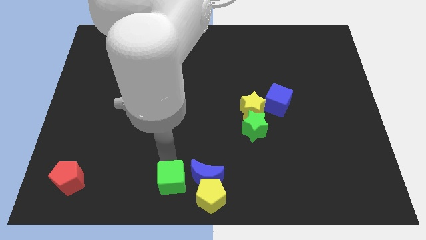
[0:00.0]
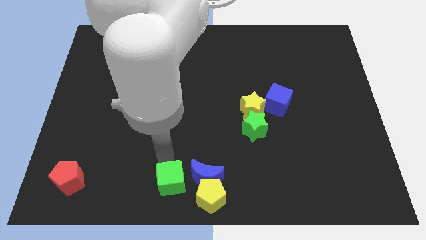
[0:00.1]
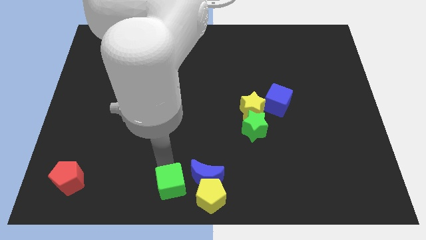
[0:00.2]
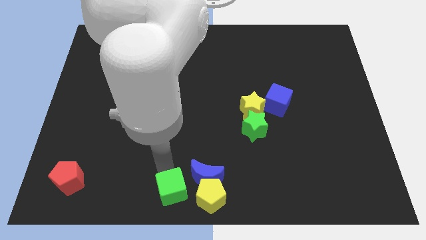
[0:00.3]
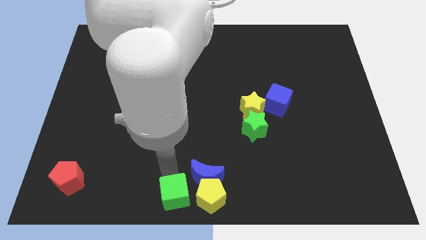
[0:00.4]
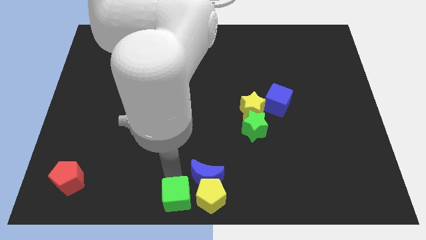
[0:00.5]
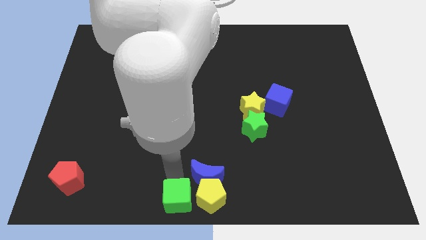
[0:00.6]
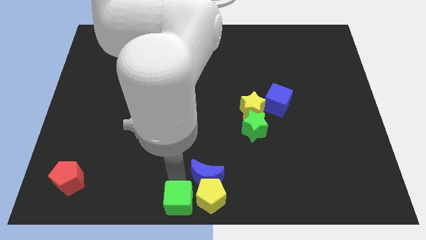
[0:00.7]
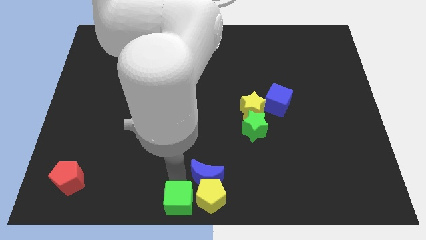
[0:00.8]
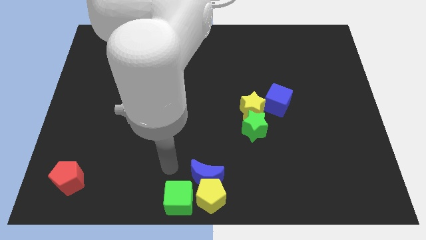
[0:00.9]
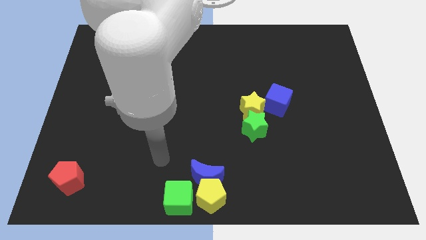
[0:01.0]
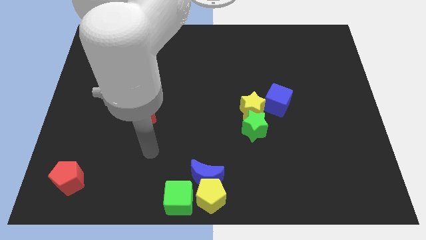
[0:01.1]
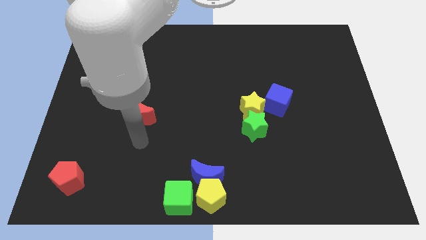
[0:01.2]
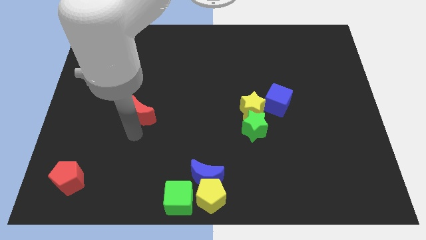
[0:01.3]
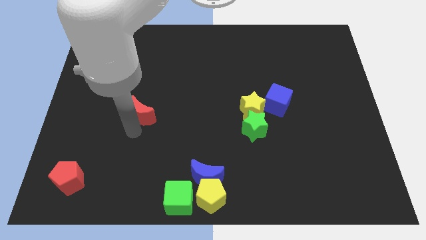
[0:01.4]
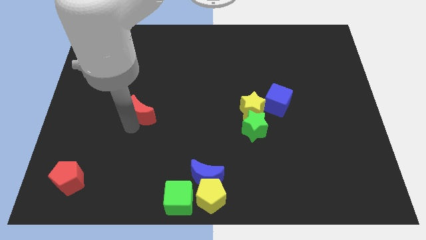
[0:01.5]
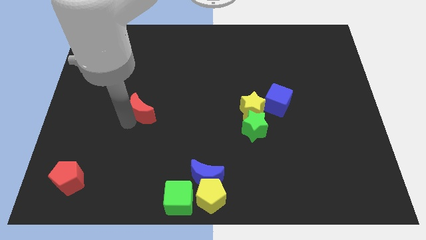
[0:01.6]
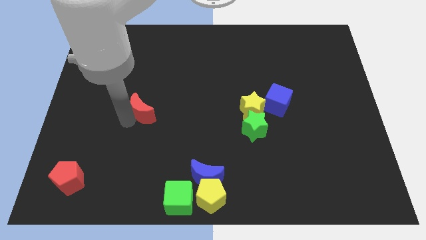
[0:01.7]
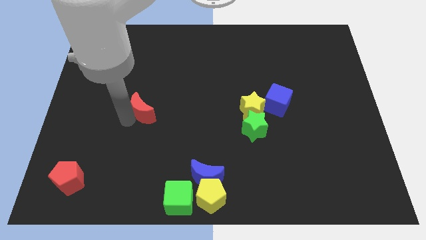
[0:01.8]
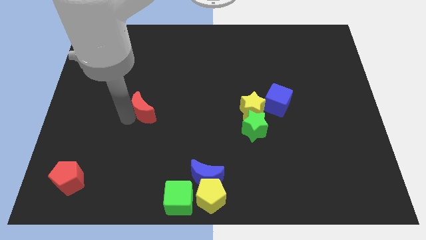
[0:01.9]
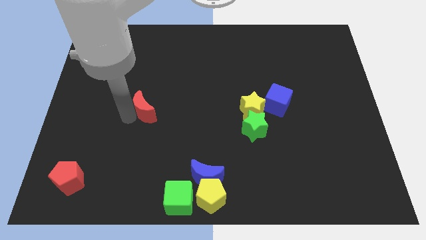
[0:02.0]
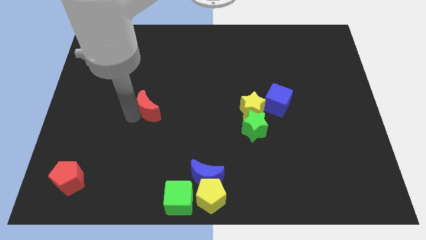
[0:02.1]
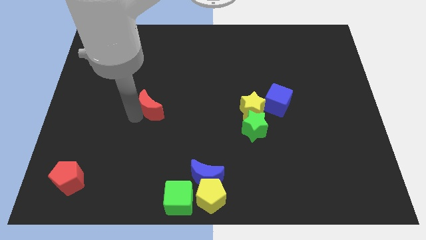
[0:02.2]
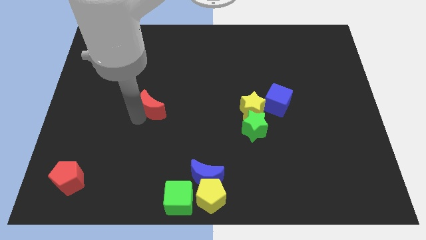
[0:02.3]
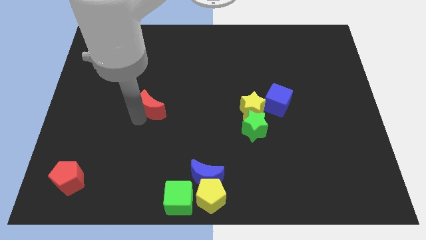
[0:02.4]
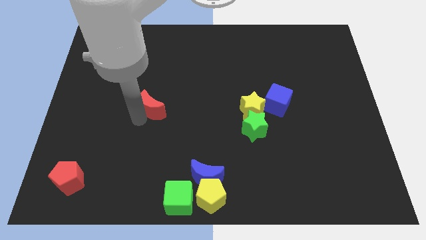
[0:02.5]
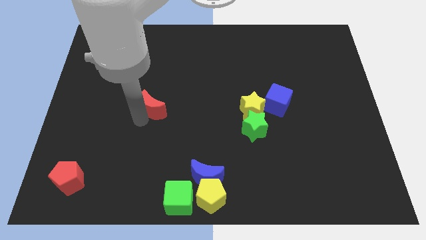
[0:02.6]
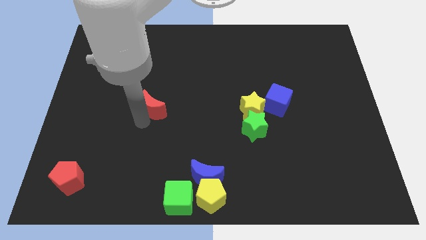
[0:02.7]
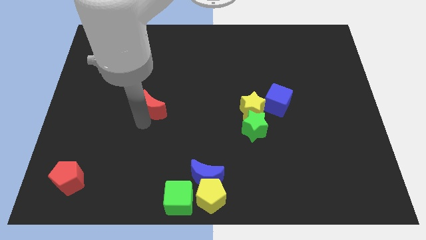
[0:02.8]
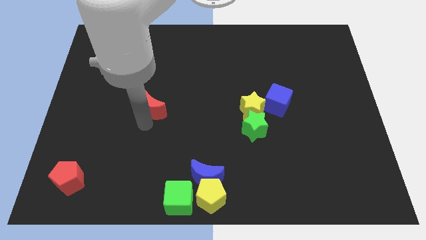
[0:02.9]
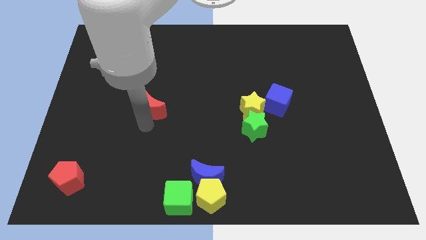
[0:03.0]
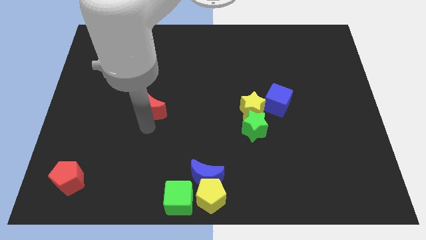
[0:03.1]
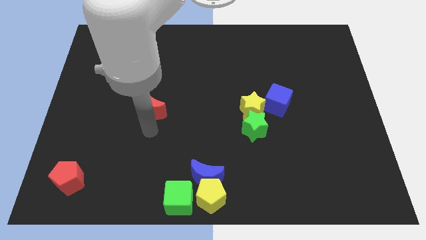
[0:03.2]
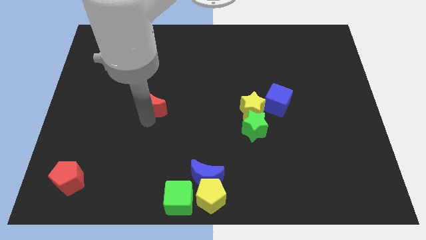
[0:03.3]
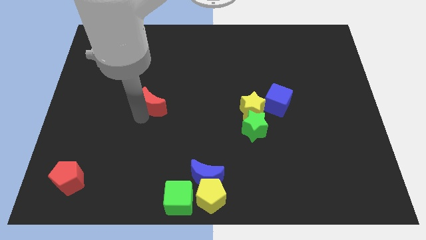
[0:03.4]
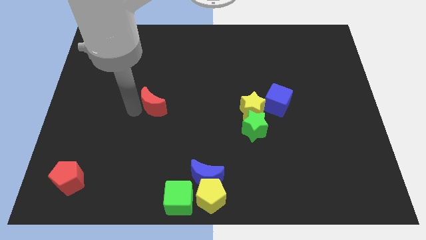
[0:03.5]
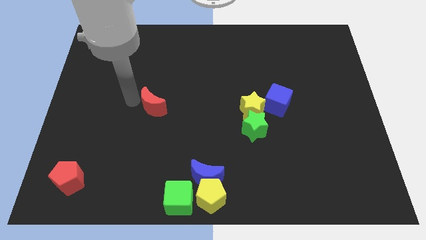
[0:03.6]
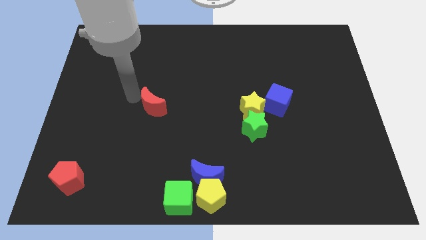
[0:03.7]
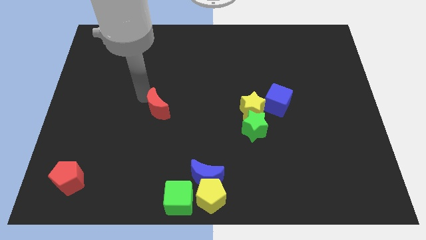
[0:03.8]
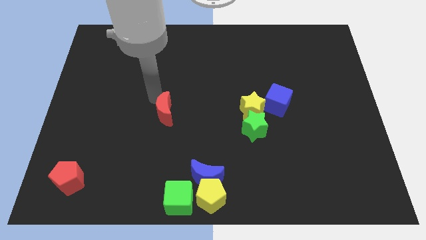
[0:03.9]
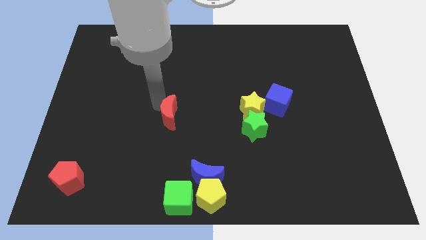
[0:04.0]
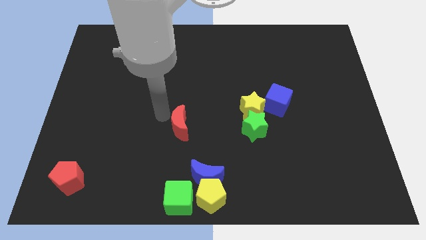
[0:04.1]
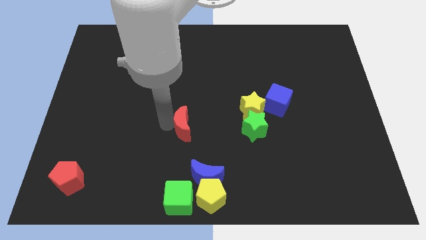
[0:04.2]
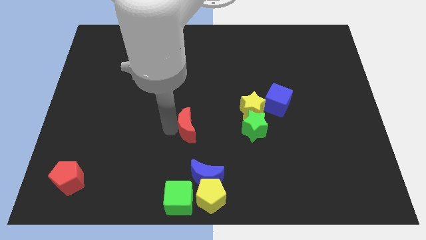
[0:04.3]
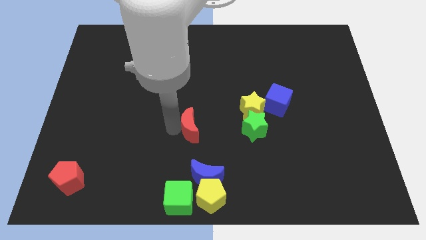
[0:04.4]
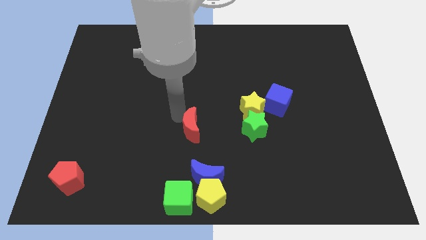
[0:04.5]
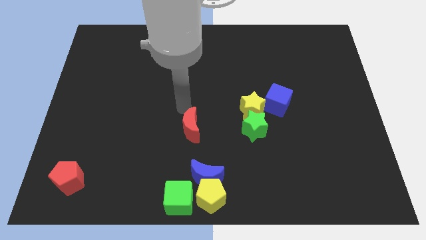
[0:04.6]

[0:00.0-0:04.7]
place the red moon left to the green star

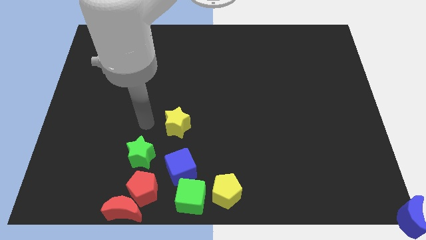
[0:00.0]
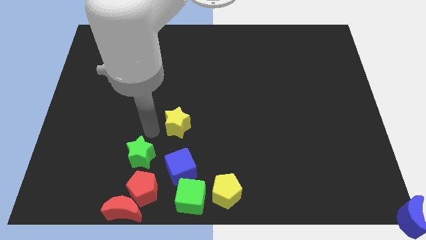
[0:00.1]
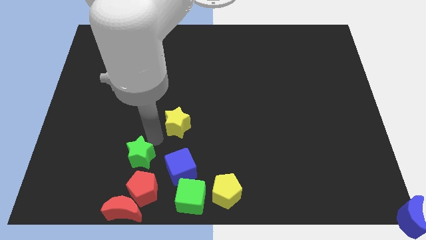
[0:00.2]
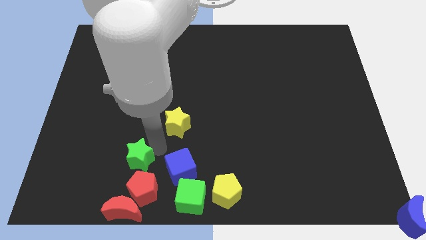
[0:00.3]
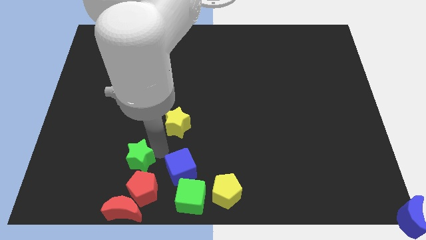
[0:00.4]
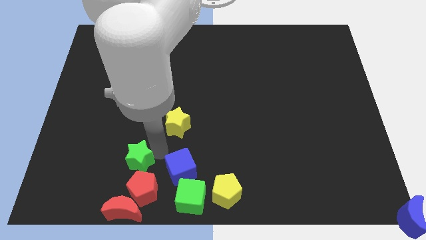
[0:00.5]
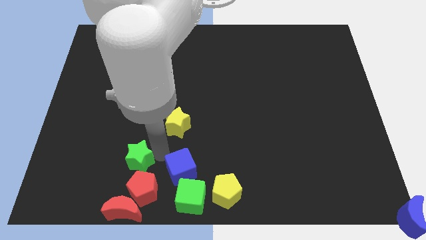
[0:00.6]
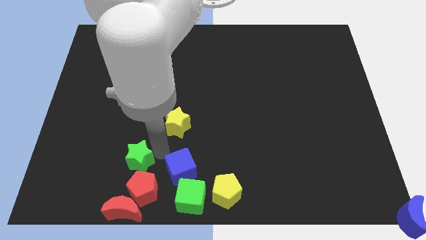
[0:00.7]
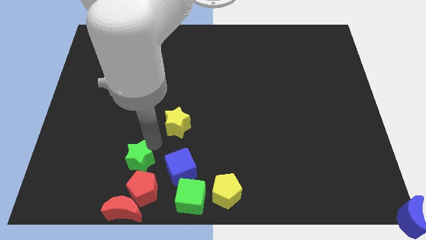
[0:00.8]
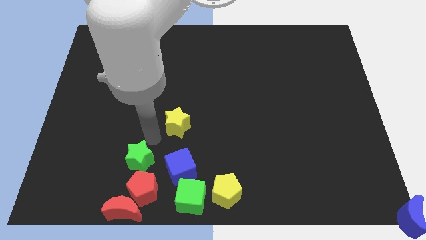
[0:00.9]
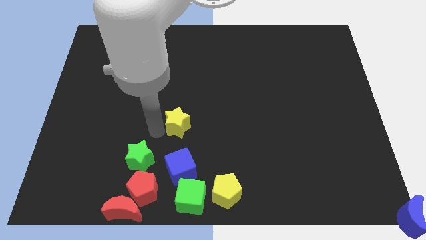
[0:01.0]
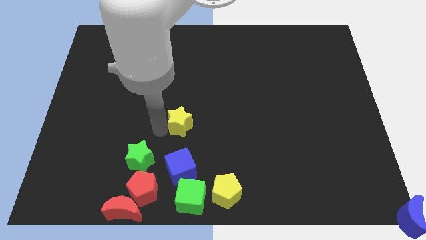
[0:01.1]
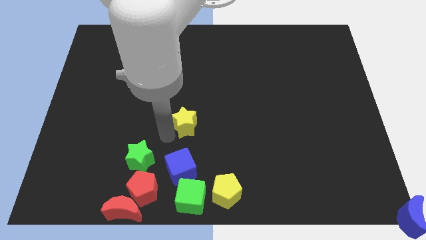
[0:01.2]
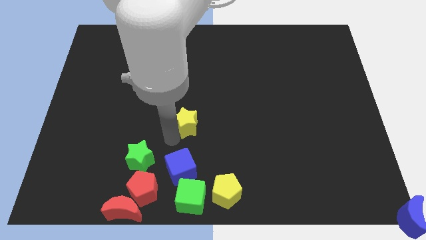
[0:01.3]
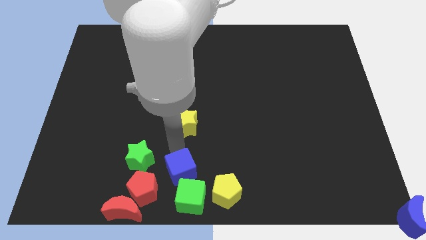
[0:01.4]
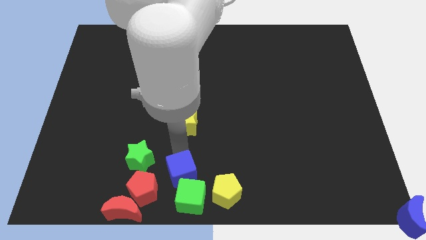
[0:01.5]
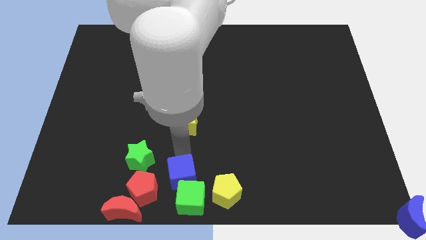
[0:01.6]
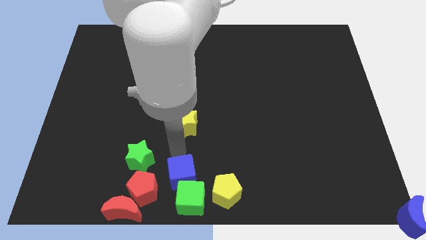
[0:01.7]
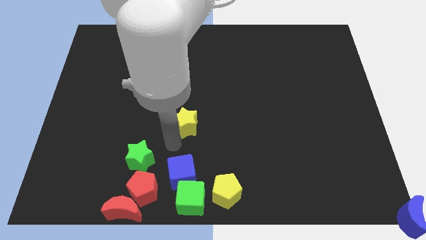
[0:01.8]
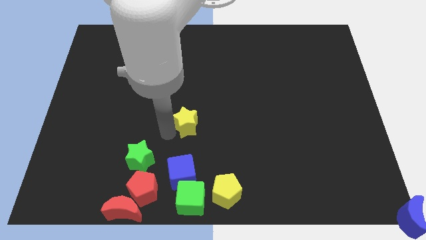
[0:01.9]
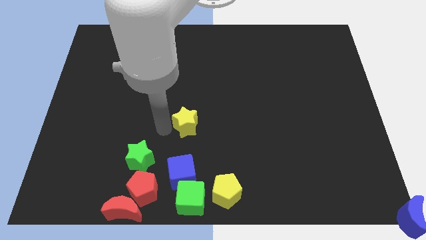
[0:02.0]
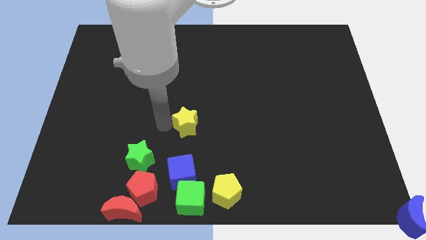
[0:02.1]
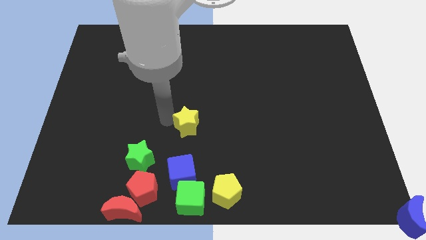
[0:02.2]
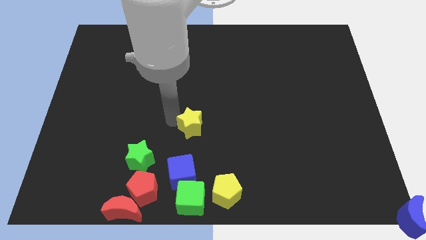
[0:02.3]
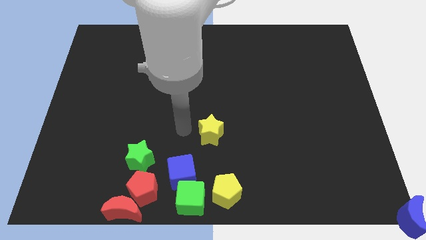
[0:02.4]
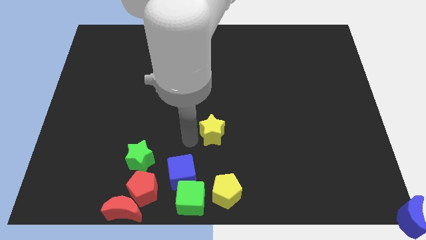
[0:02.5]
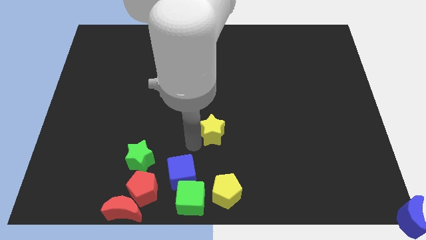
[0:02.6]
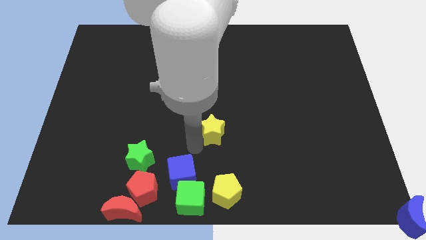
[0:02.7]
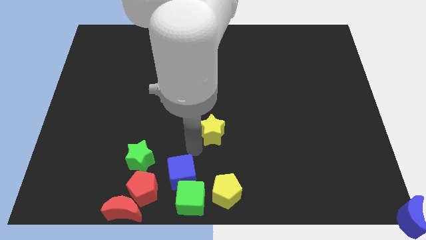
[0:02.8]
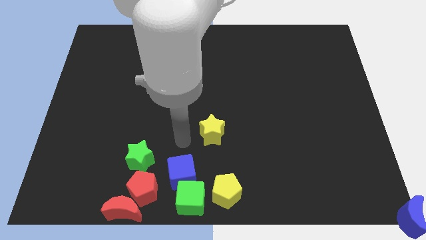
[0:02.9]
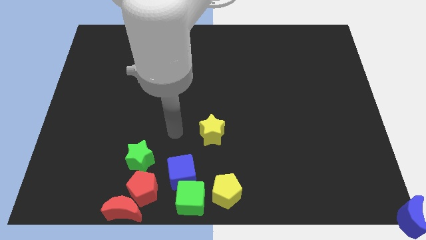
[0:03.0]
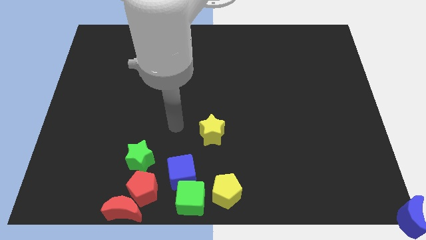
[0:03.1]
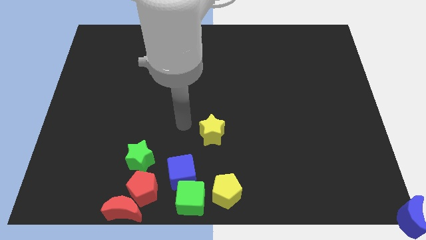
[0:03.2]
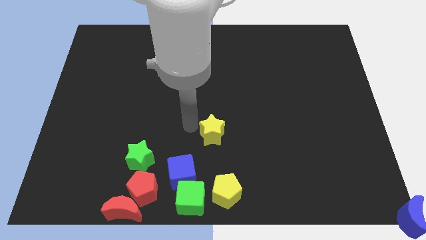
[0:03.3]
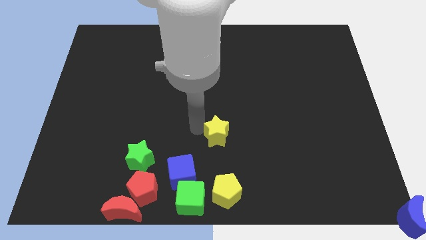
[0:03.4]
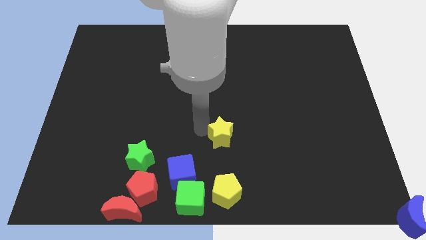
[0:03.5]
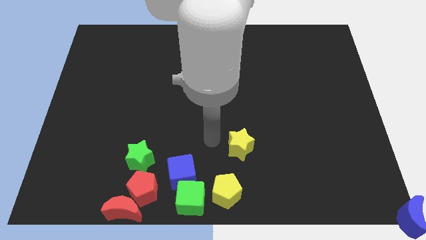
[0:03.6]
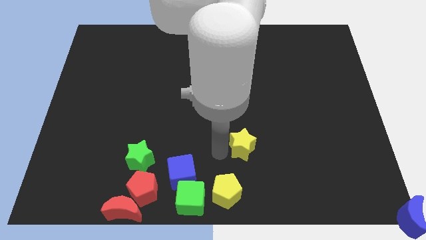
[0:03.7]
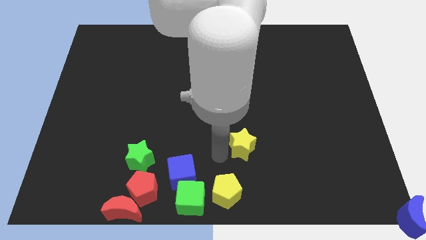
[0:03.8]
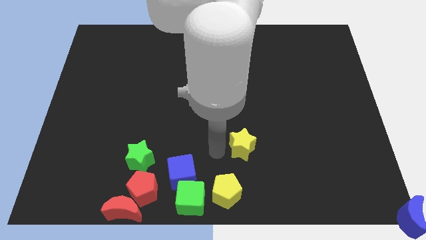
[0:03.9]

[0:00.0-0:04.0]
slightly push the blue cube into the green cube

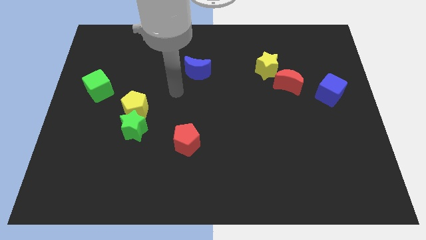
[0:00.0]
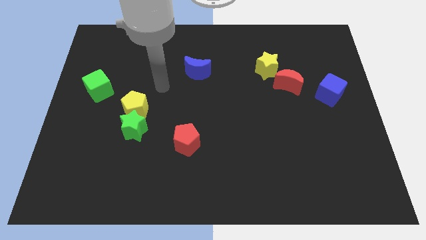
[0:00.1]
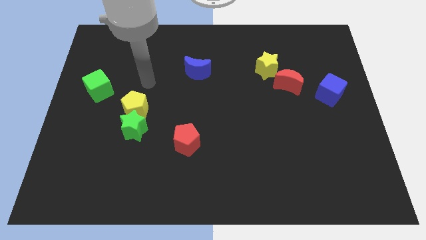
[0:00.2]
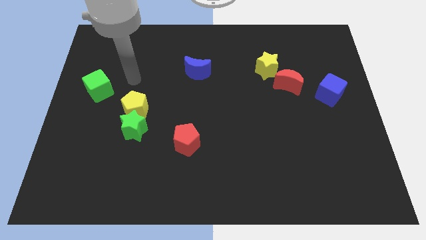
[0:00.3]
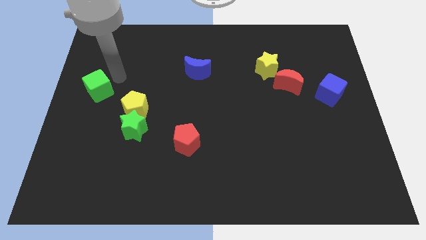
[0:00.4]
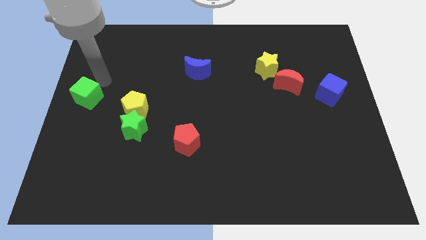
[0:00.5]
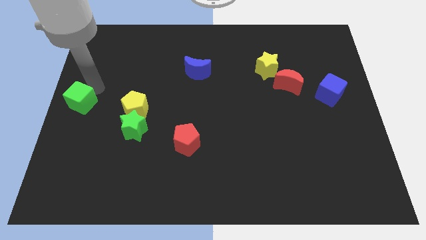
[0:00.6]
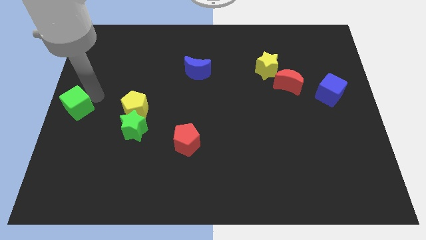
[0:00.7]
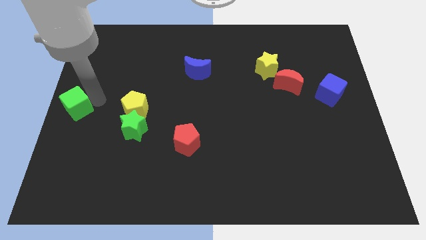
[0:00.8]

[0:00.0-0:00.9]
move the green cube left to the yellow pentagon
